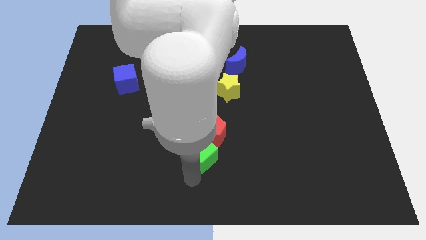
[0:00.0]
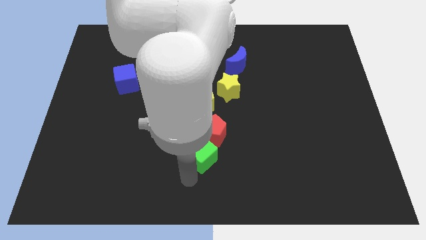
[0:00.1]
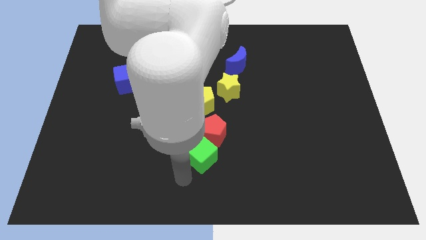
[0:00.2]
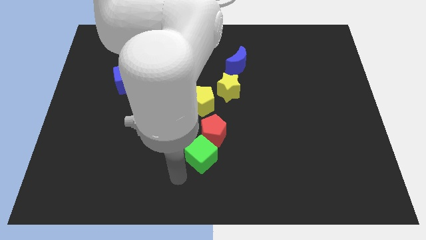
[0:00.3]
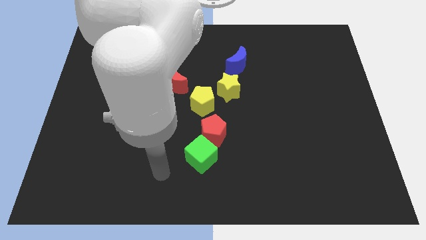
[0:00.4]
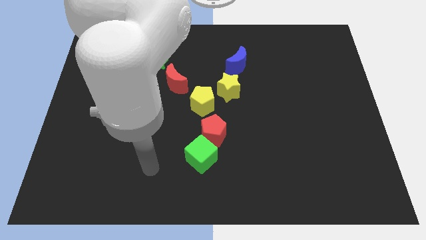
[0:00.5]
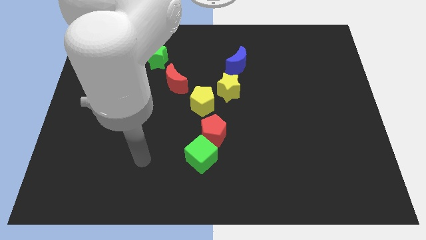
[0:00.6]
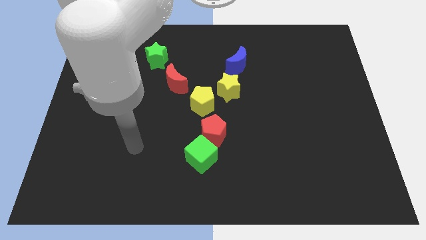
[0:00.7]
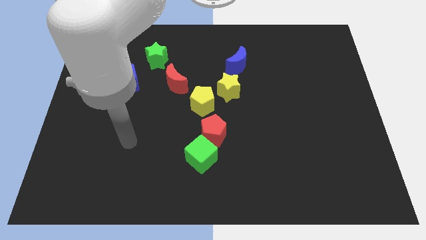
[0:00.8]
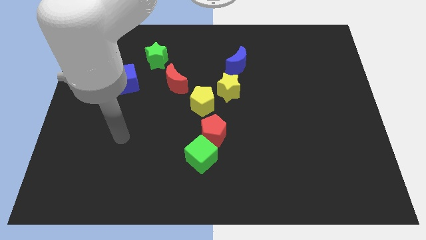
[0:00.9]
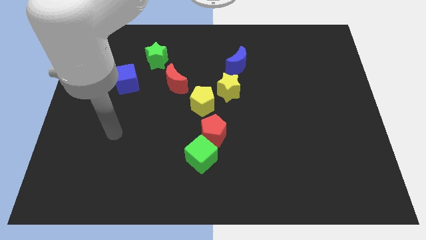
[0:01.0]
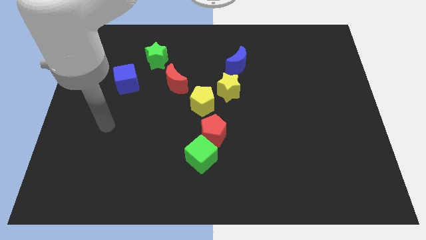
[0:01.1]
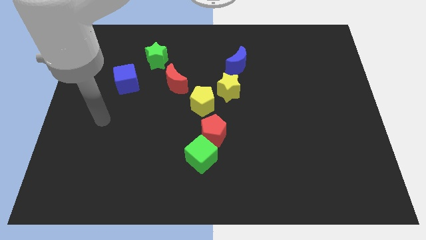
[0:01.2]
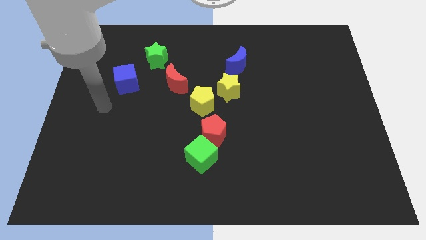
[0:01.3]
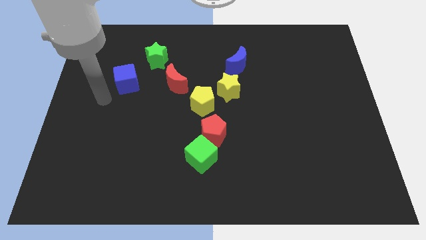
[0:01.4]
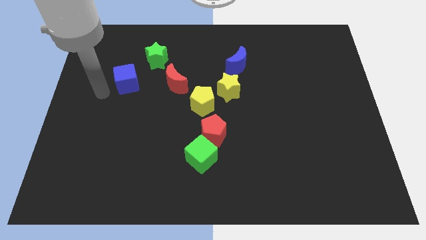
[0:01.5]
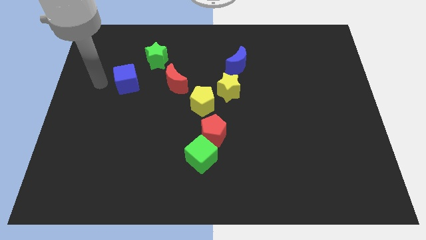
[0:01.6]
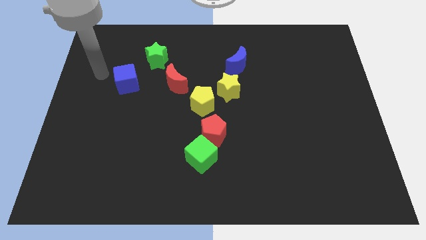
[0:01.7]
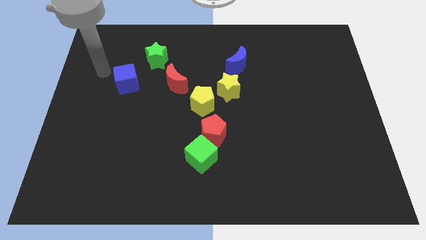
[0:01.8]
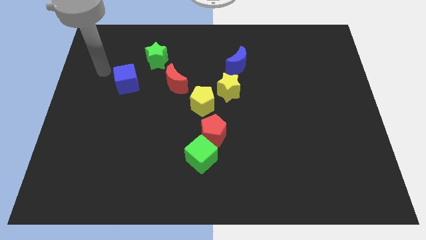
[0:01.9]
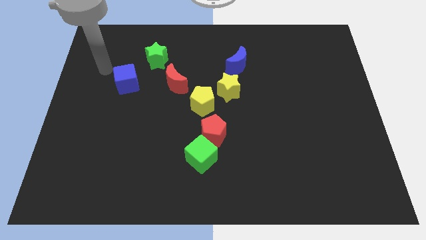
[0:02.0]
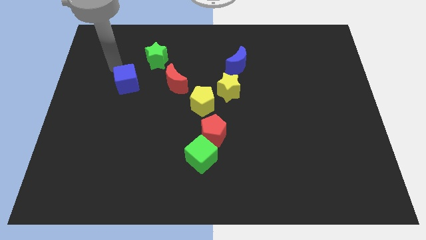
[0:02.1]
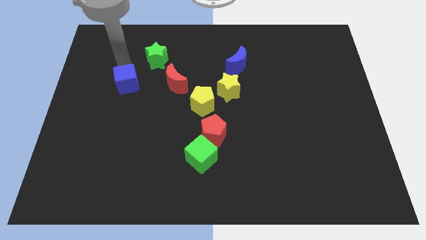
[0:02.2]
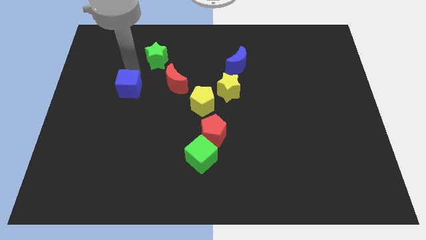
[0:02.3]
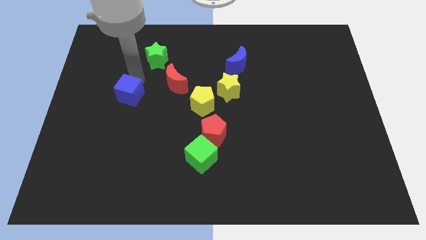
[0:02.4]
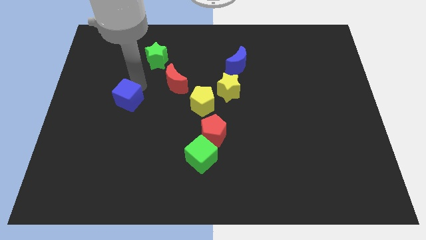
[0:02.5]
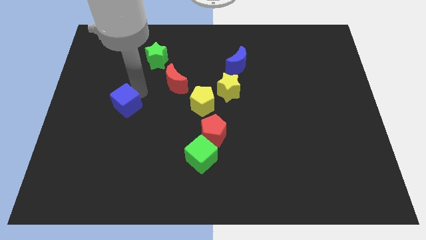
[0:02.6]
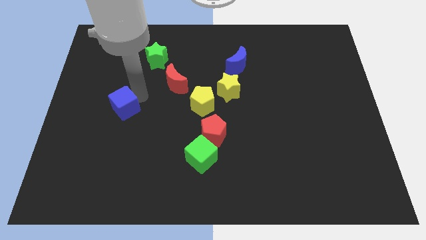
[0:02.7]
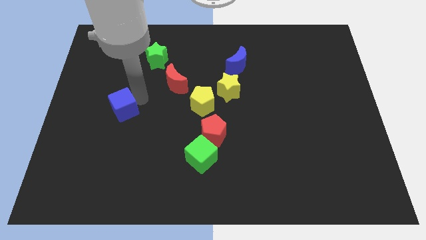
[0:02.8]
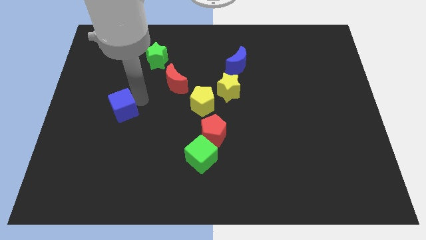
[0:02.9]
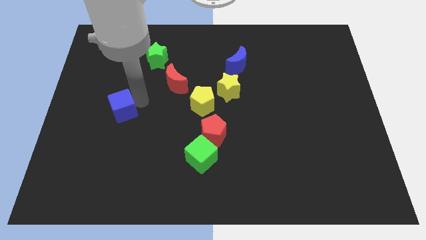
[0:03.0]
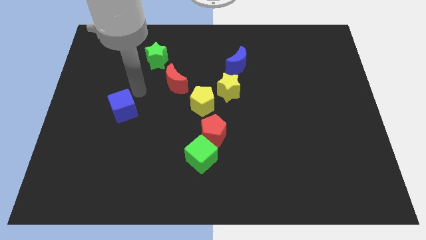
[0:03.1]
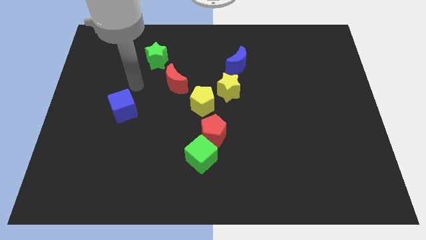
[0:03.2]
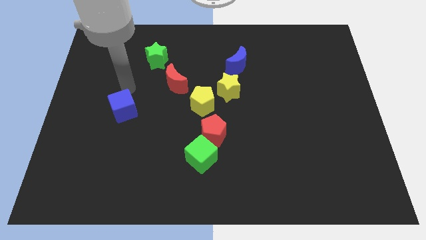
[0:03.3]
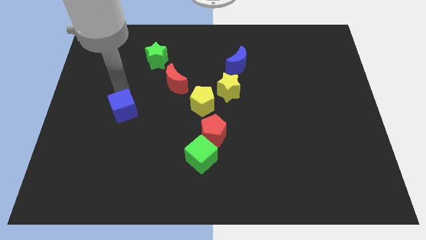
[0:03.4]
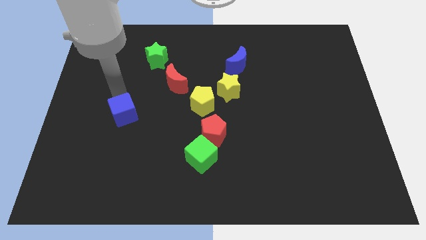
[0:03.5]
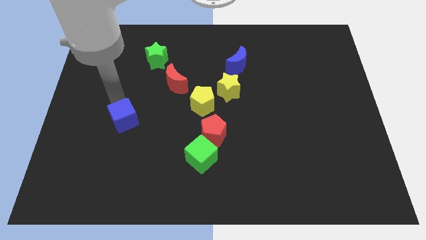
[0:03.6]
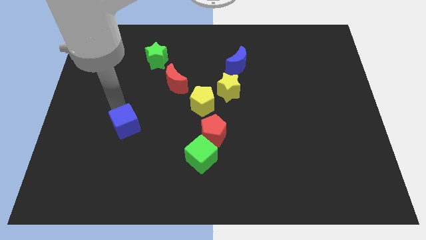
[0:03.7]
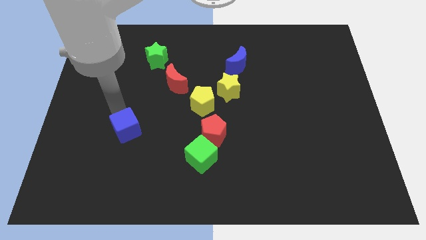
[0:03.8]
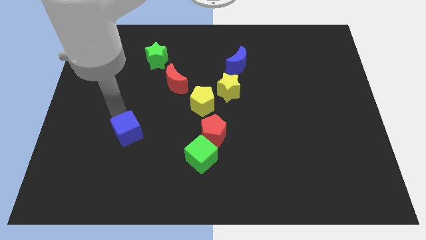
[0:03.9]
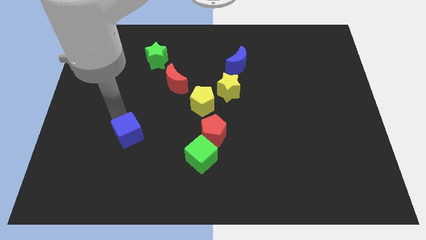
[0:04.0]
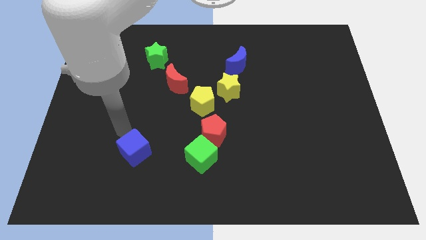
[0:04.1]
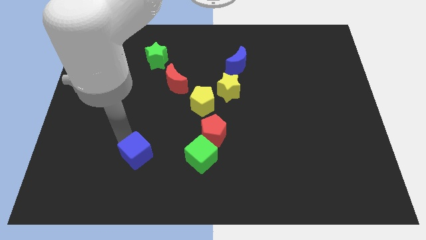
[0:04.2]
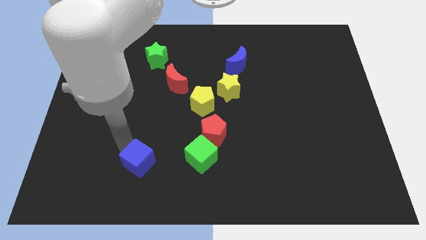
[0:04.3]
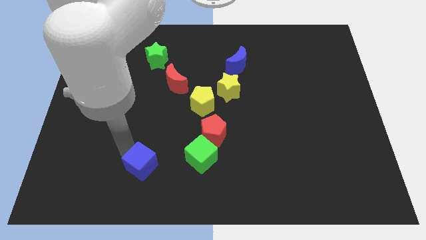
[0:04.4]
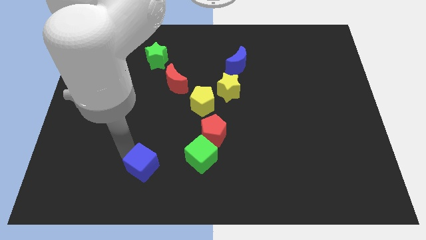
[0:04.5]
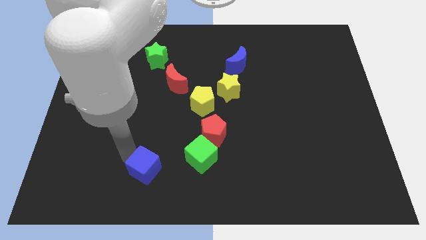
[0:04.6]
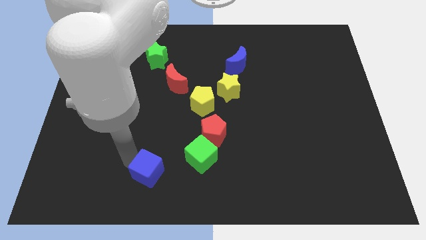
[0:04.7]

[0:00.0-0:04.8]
place the blue cube below the green star

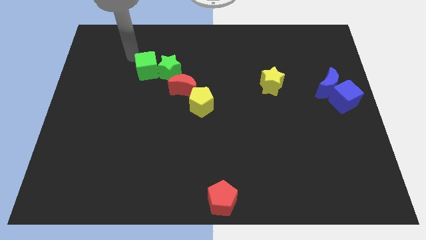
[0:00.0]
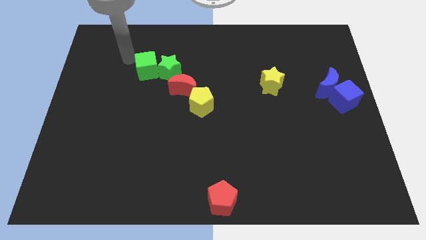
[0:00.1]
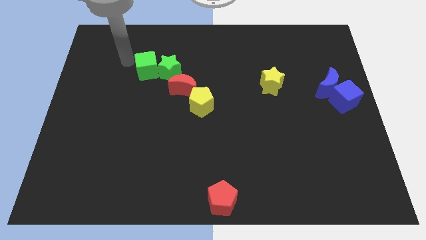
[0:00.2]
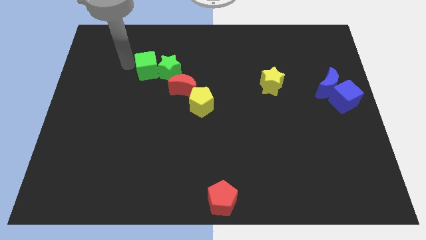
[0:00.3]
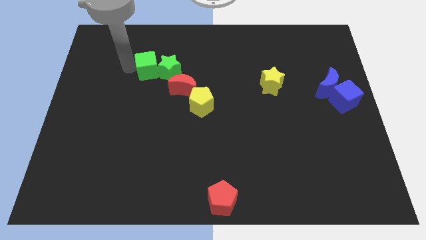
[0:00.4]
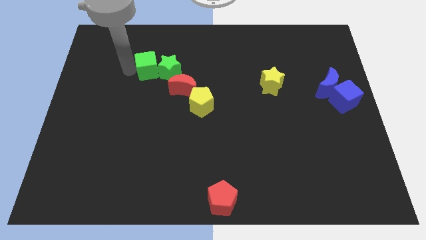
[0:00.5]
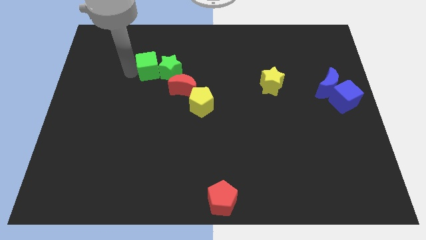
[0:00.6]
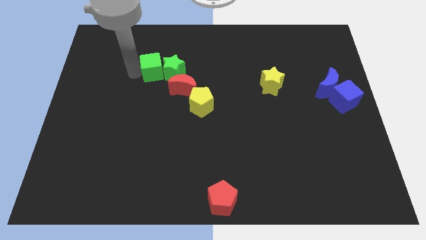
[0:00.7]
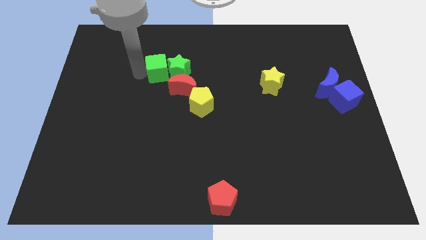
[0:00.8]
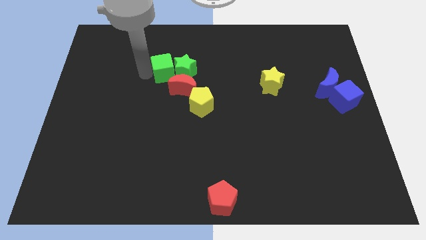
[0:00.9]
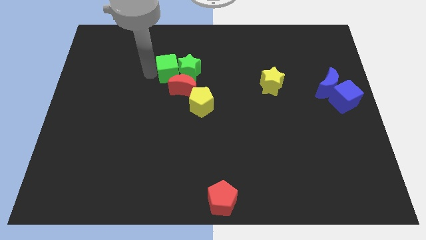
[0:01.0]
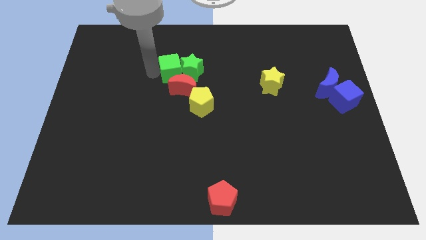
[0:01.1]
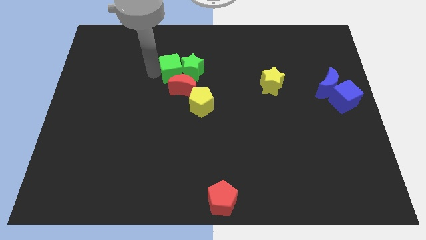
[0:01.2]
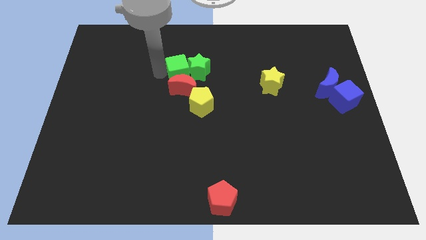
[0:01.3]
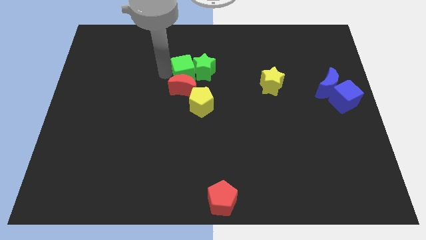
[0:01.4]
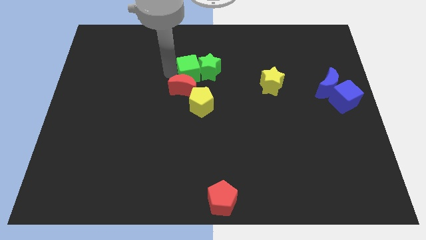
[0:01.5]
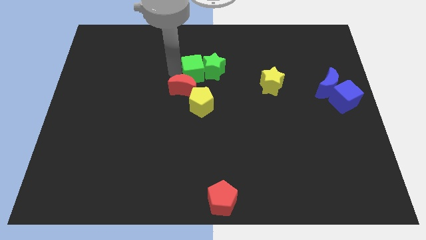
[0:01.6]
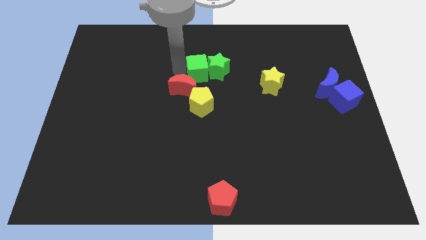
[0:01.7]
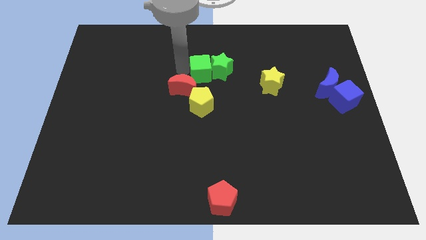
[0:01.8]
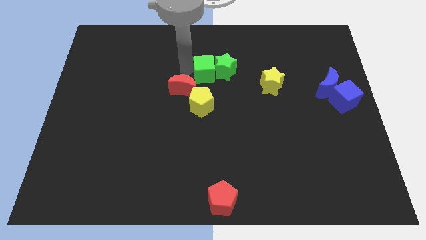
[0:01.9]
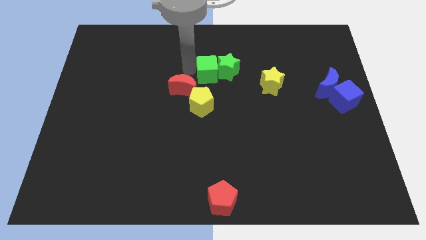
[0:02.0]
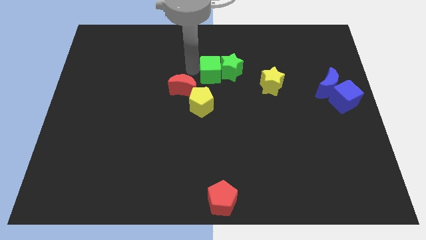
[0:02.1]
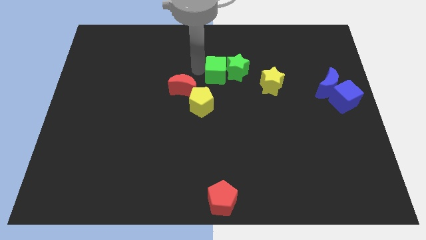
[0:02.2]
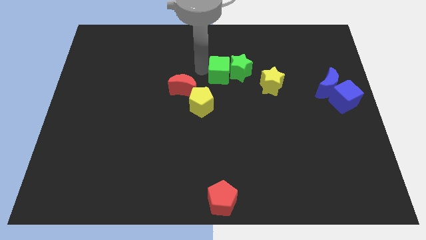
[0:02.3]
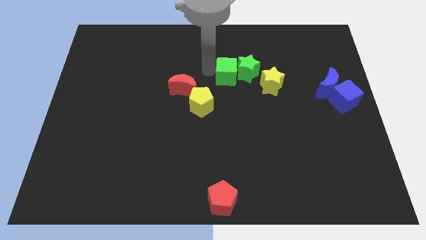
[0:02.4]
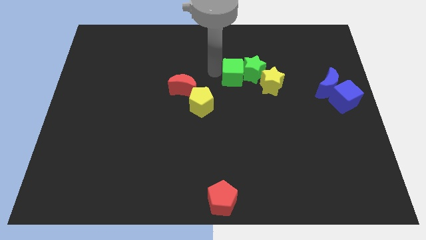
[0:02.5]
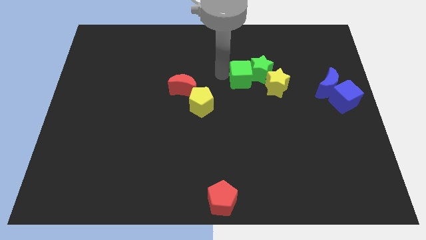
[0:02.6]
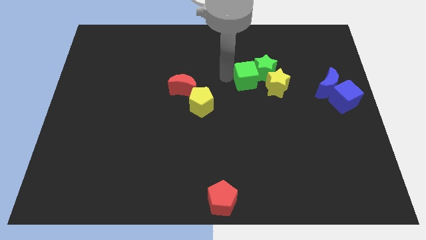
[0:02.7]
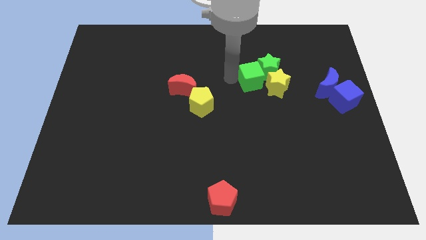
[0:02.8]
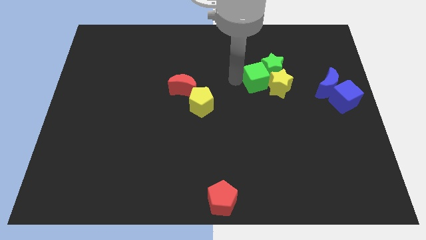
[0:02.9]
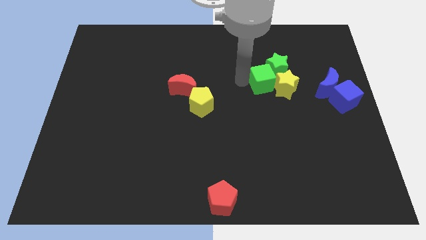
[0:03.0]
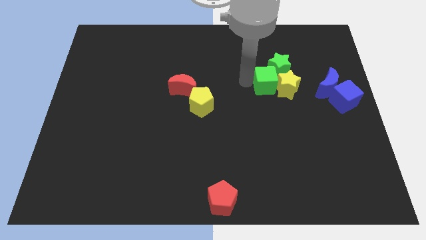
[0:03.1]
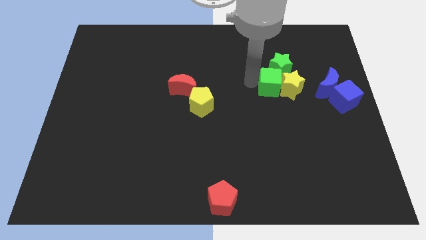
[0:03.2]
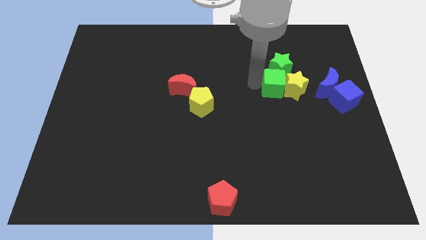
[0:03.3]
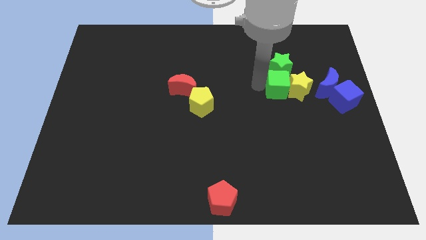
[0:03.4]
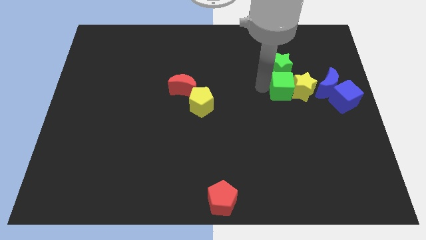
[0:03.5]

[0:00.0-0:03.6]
push the green blocks in to yellow star

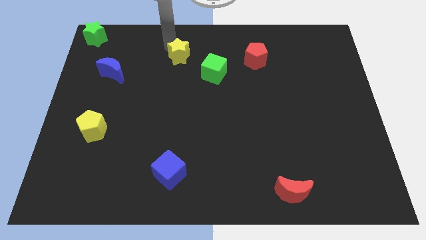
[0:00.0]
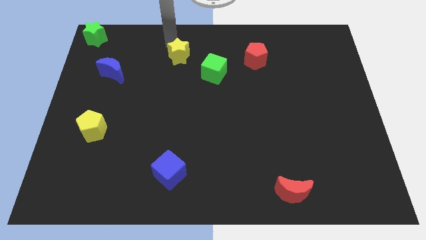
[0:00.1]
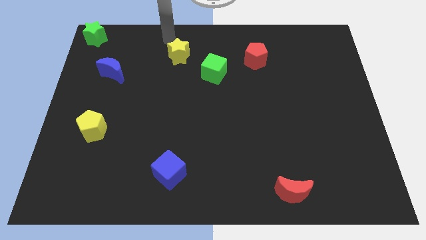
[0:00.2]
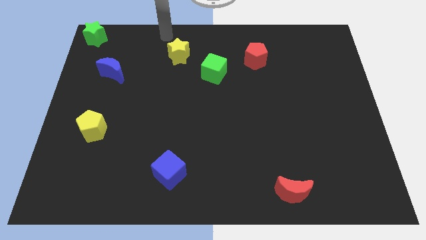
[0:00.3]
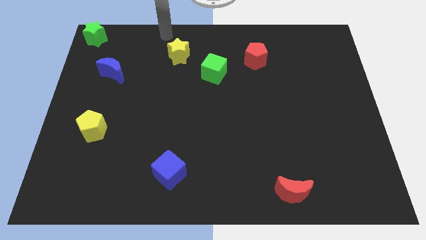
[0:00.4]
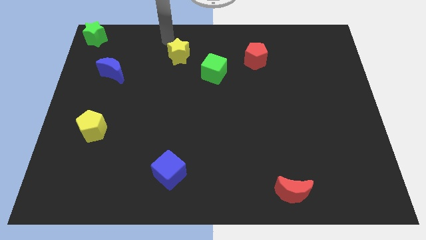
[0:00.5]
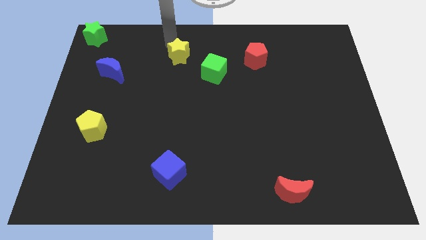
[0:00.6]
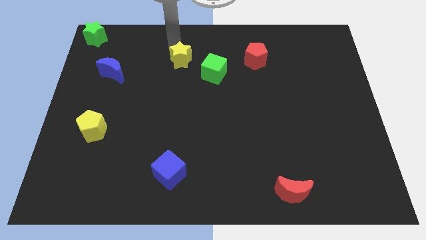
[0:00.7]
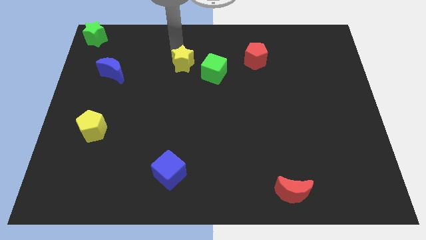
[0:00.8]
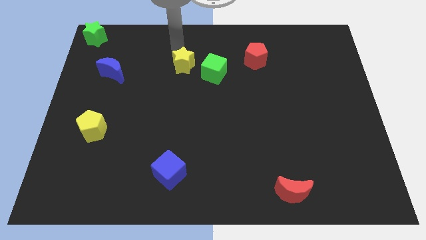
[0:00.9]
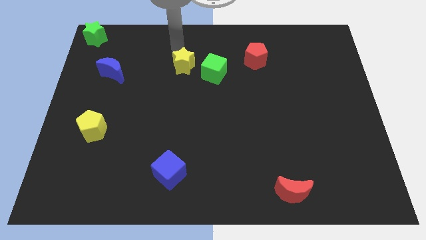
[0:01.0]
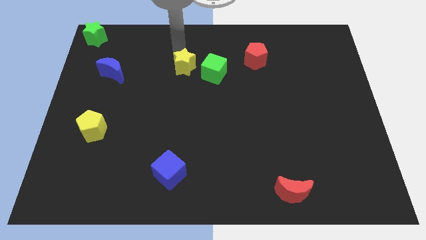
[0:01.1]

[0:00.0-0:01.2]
slide yellow star towards green cube
